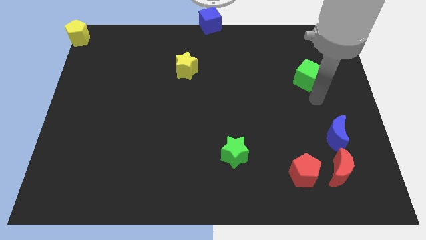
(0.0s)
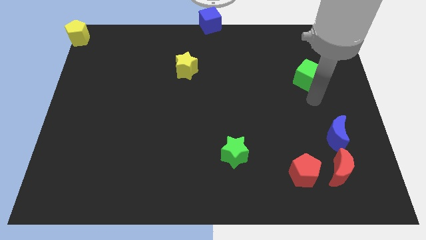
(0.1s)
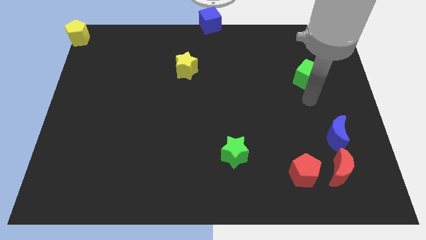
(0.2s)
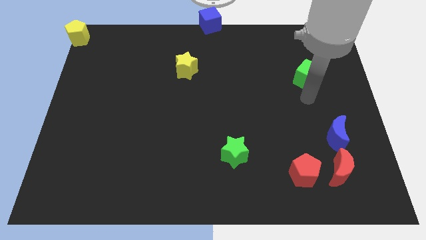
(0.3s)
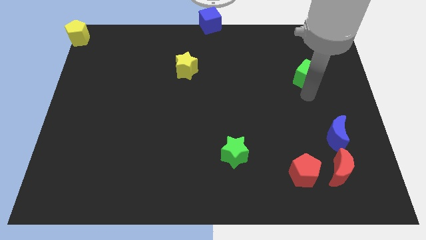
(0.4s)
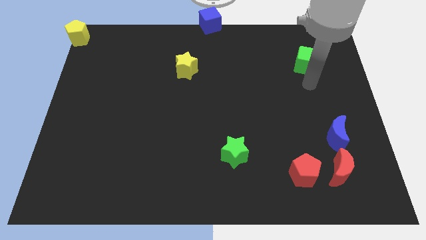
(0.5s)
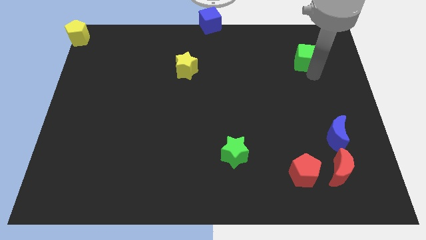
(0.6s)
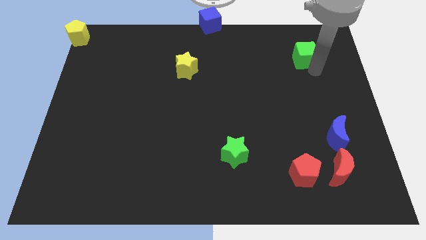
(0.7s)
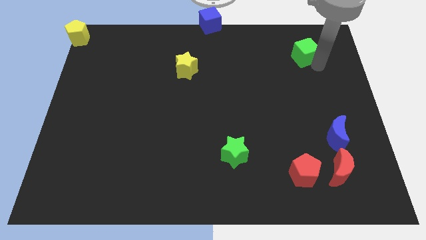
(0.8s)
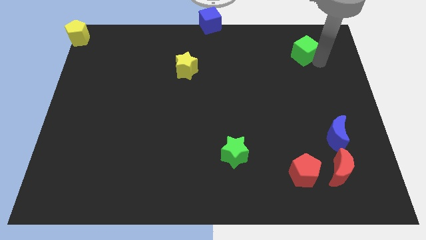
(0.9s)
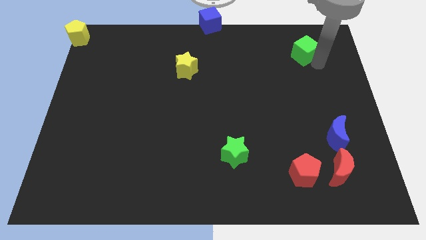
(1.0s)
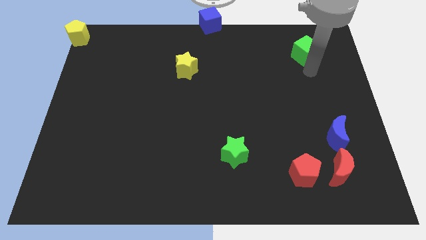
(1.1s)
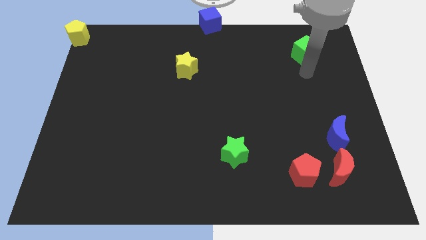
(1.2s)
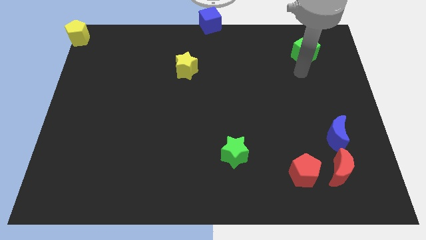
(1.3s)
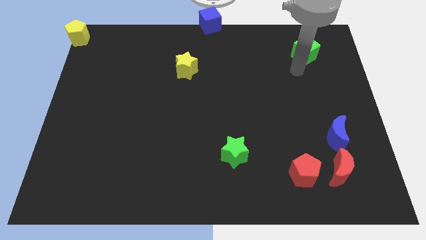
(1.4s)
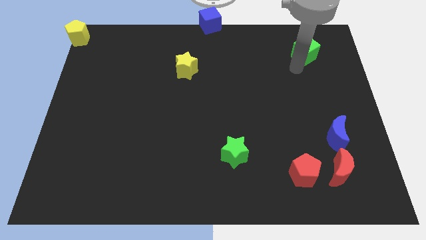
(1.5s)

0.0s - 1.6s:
move green cube slightly up

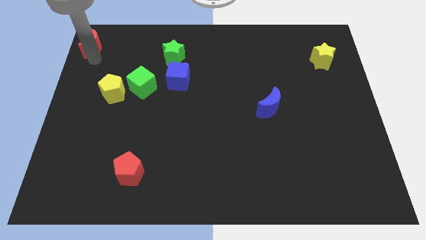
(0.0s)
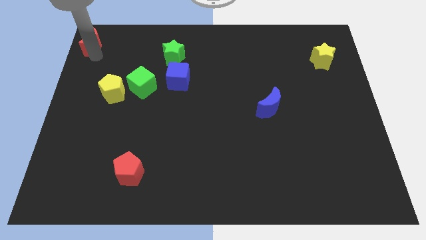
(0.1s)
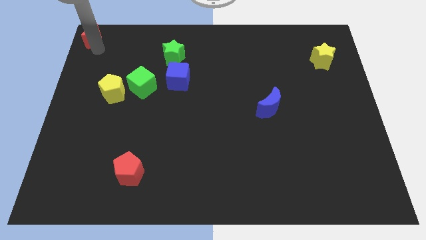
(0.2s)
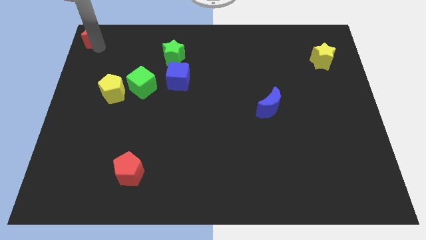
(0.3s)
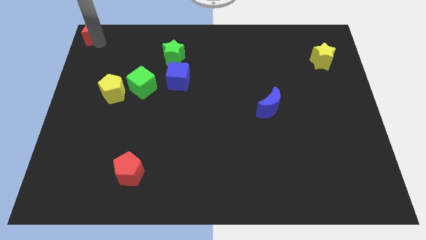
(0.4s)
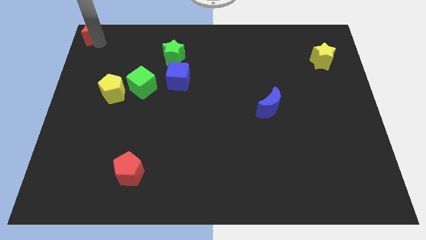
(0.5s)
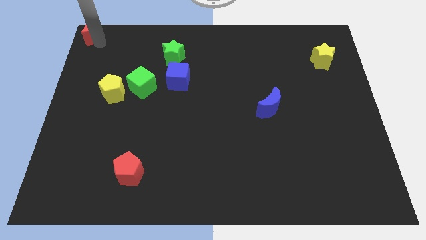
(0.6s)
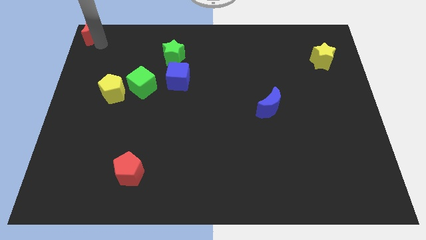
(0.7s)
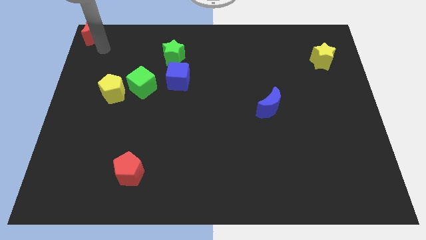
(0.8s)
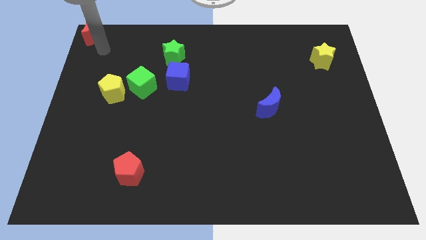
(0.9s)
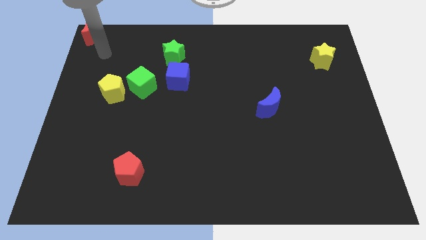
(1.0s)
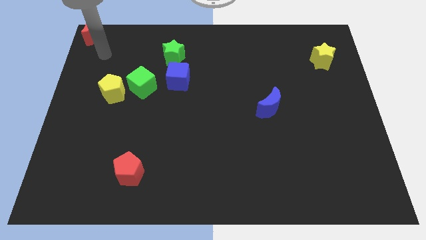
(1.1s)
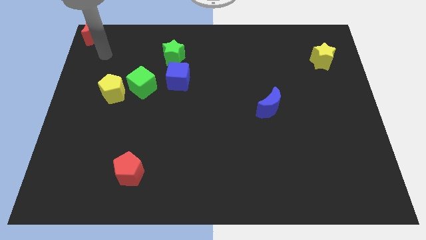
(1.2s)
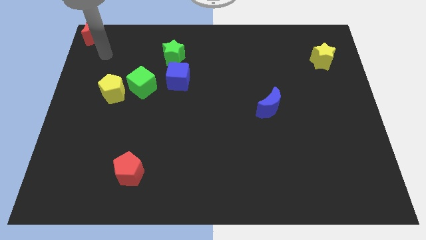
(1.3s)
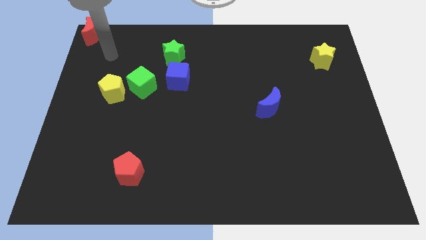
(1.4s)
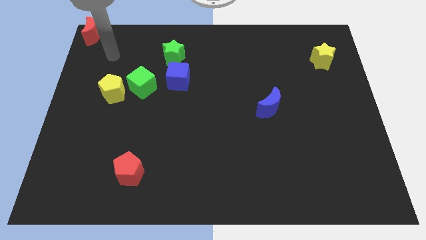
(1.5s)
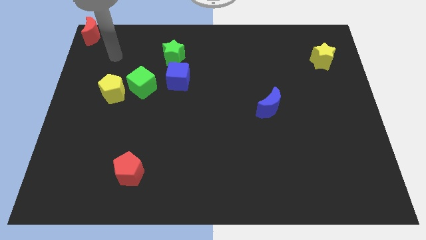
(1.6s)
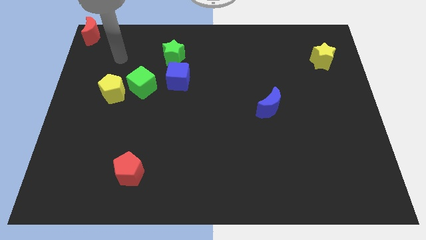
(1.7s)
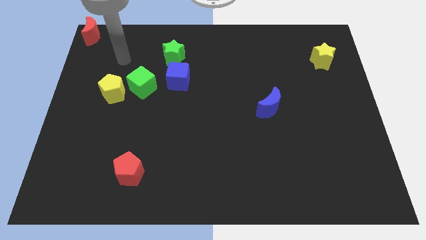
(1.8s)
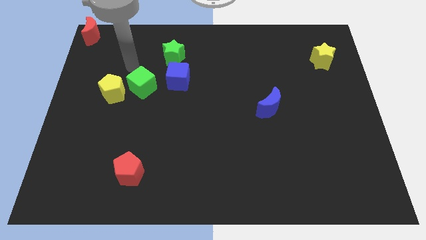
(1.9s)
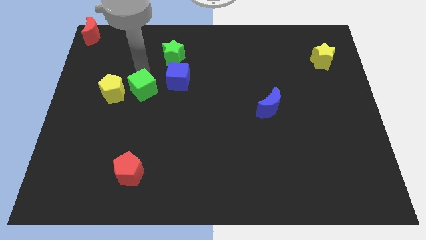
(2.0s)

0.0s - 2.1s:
slightly move the red moon to the top left corner

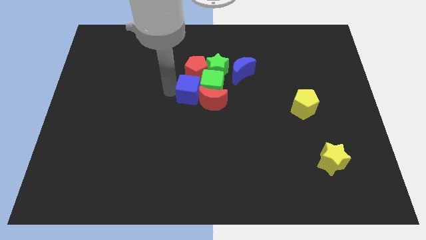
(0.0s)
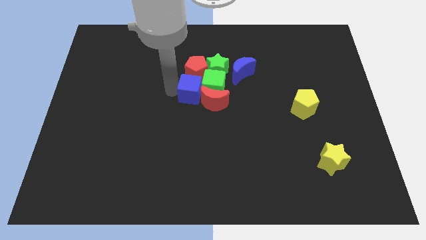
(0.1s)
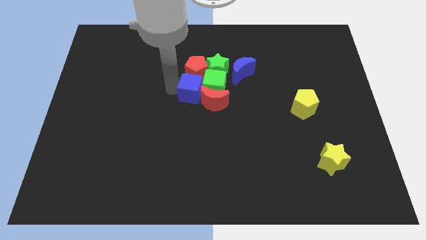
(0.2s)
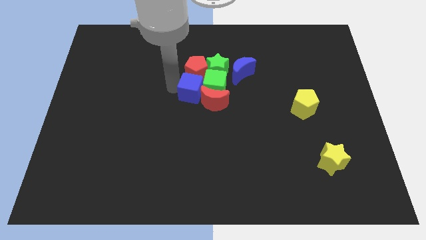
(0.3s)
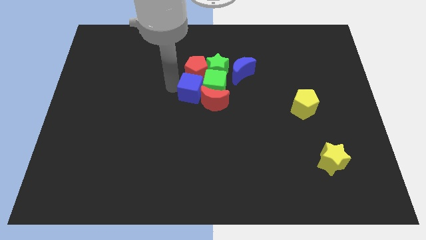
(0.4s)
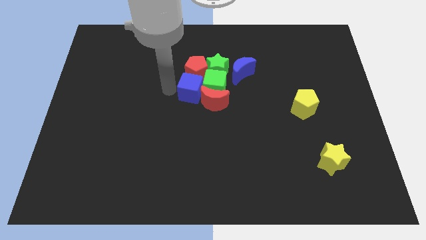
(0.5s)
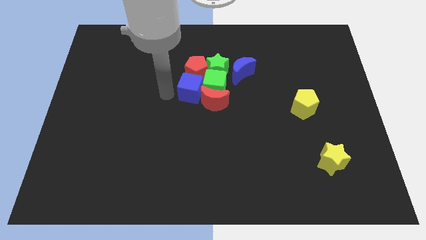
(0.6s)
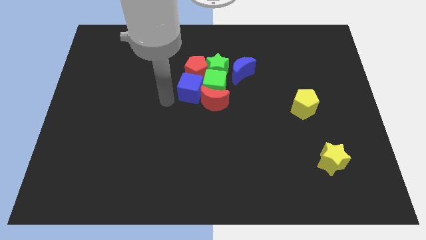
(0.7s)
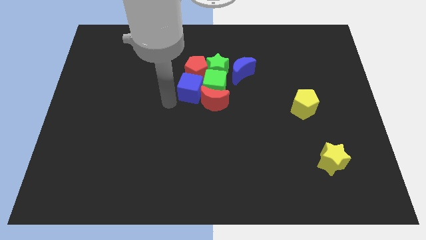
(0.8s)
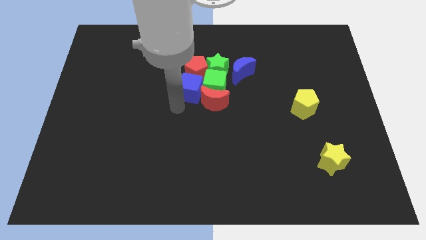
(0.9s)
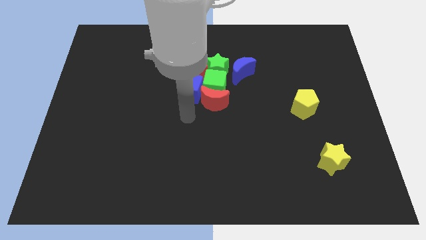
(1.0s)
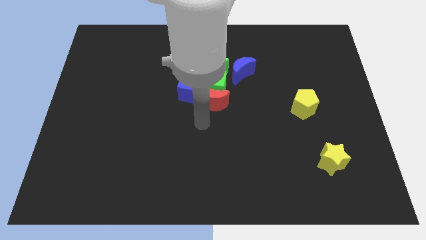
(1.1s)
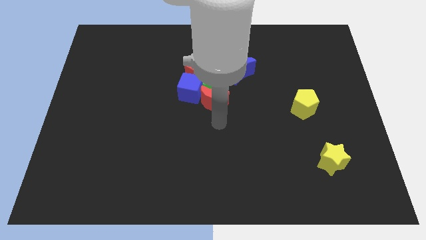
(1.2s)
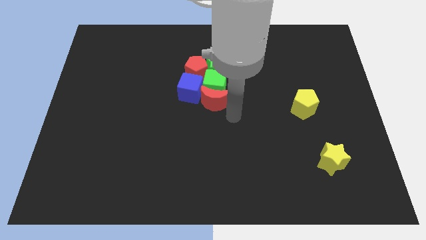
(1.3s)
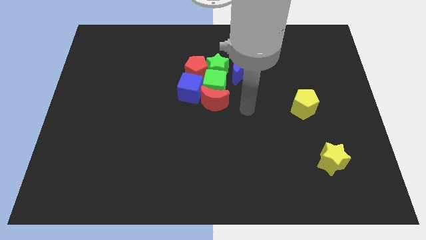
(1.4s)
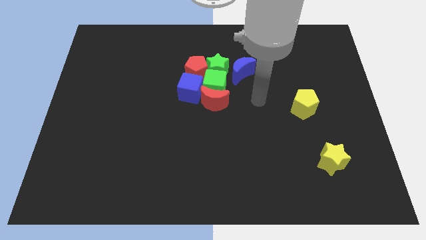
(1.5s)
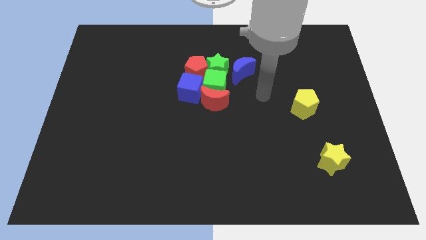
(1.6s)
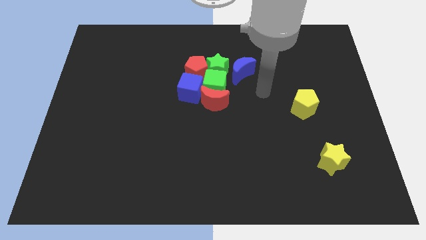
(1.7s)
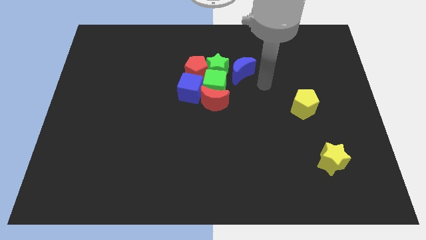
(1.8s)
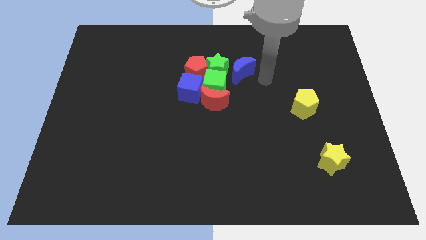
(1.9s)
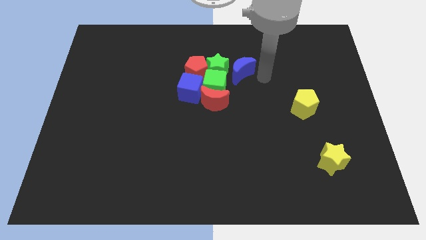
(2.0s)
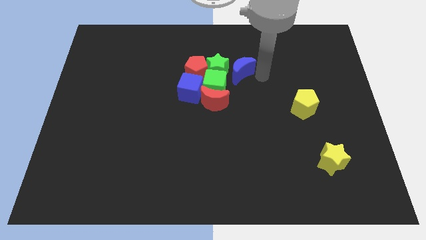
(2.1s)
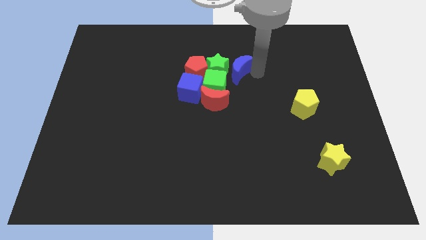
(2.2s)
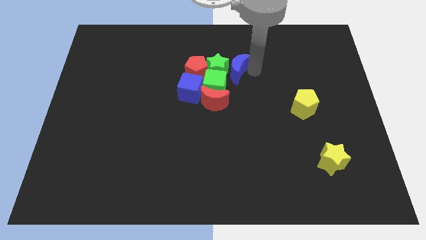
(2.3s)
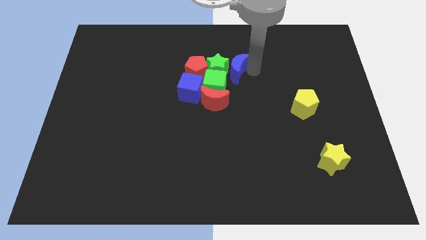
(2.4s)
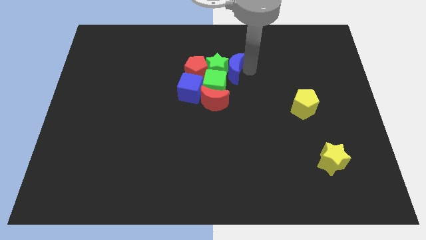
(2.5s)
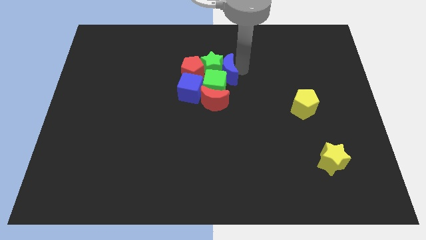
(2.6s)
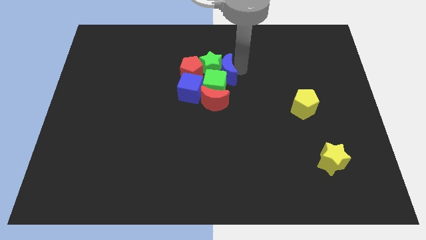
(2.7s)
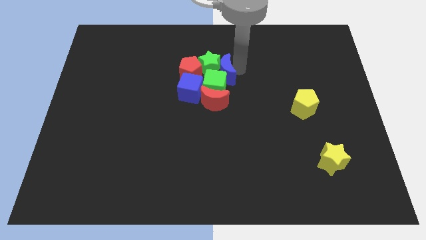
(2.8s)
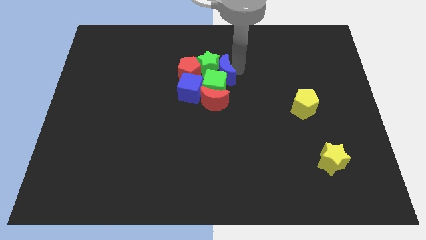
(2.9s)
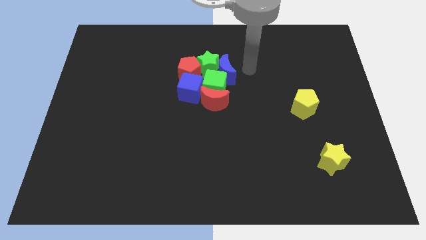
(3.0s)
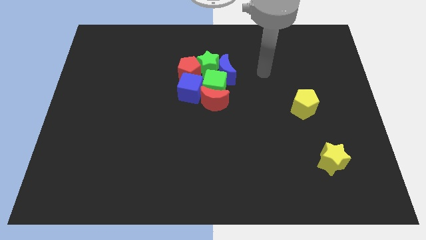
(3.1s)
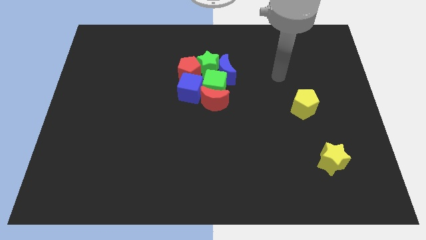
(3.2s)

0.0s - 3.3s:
slightly push the blue moon into the green star

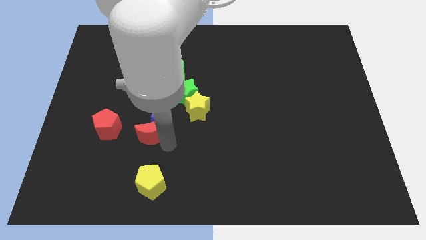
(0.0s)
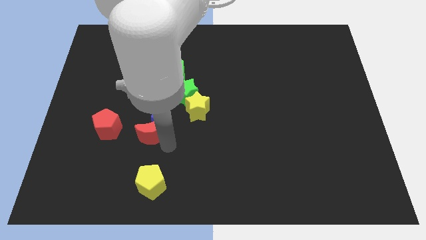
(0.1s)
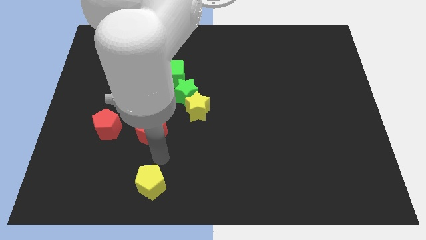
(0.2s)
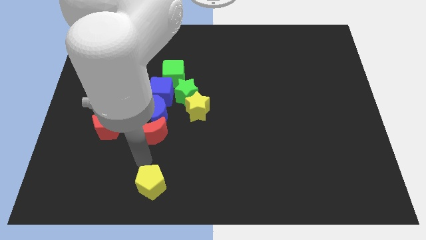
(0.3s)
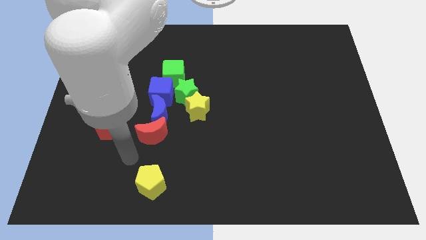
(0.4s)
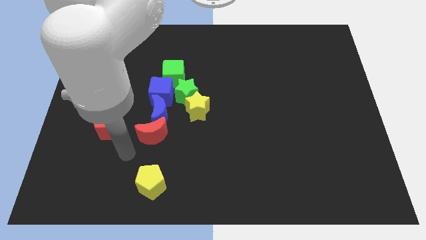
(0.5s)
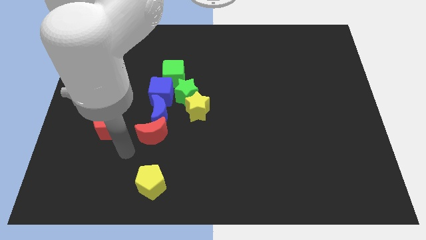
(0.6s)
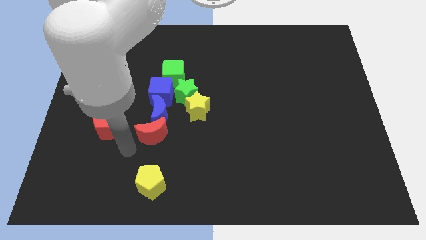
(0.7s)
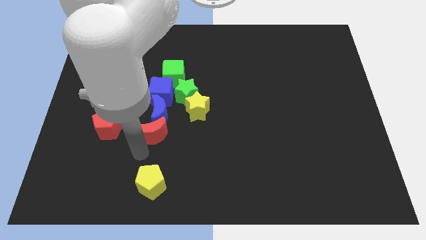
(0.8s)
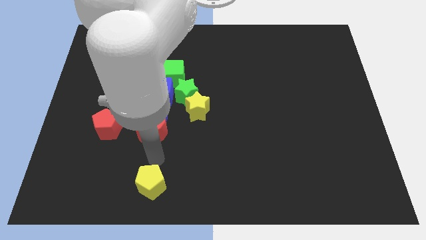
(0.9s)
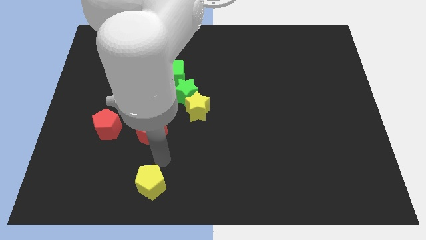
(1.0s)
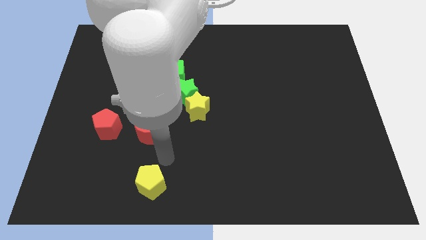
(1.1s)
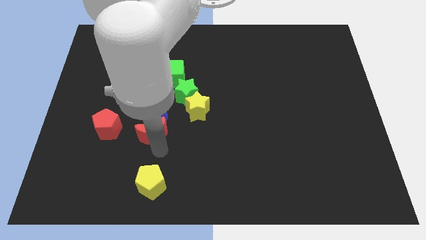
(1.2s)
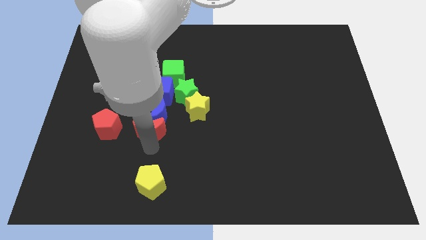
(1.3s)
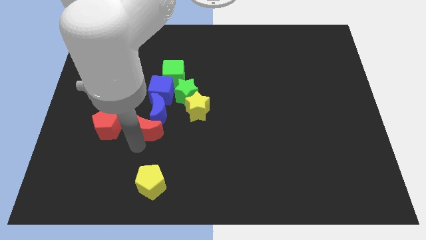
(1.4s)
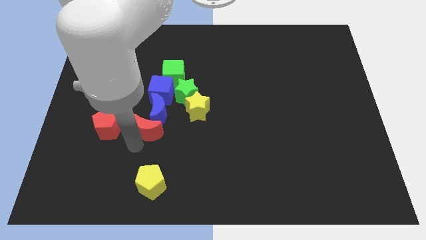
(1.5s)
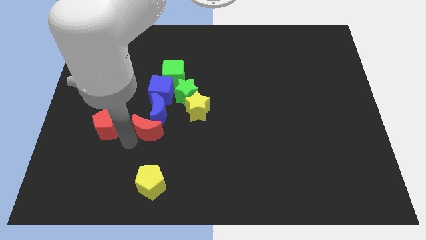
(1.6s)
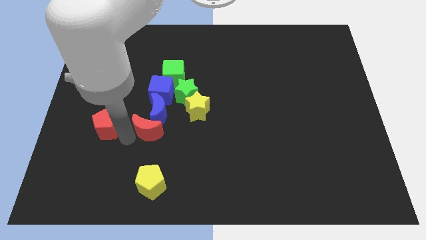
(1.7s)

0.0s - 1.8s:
place the red moon to the right of red pentagon

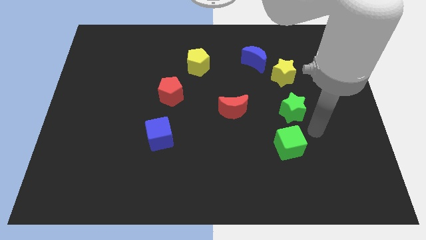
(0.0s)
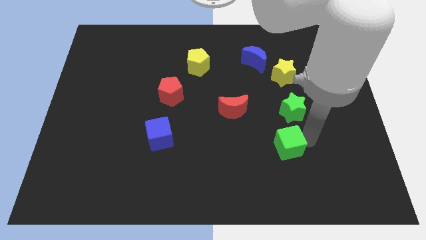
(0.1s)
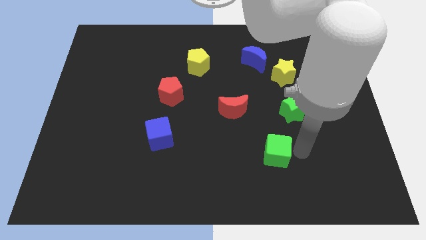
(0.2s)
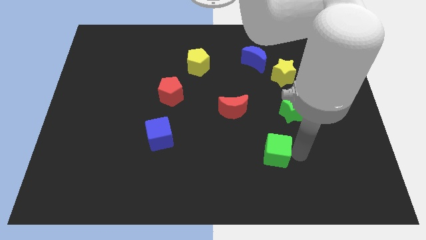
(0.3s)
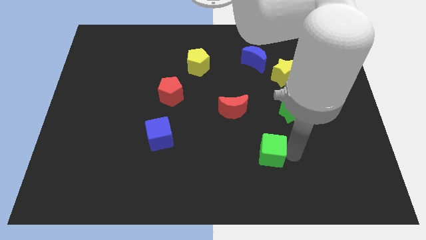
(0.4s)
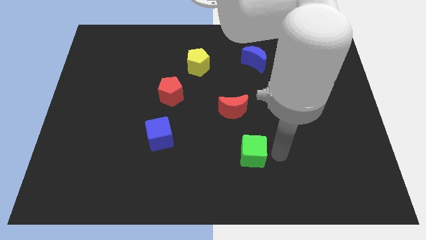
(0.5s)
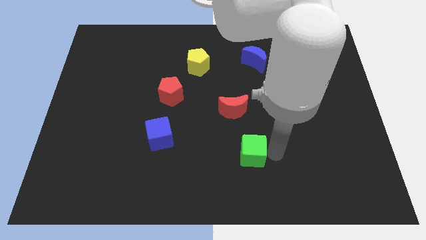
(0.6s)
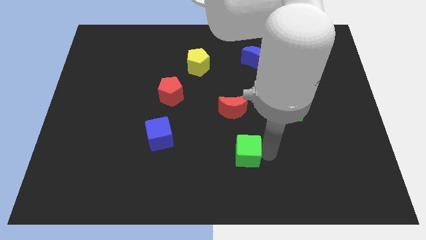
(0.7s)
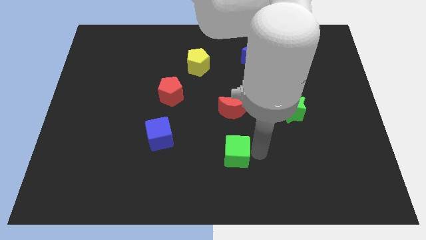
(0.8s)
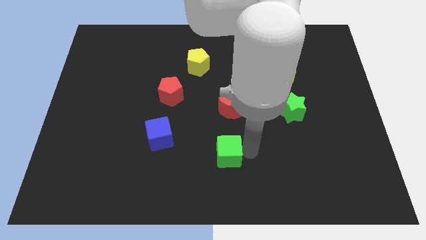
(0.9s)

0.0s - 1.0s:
place green cube to the bottom of the red moon
